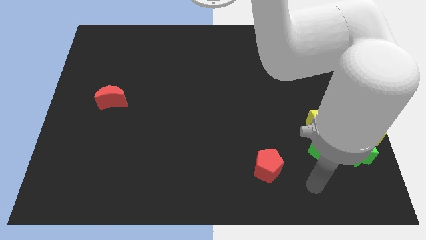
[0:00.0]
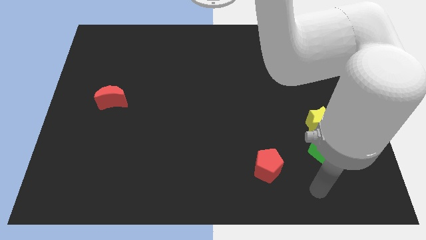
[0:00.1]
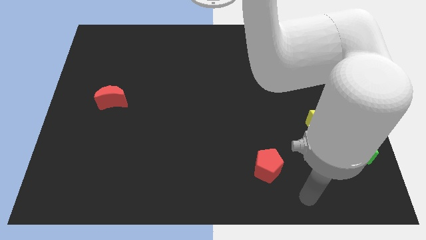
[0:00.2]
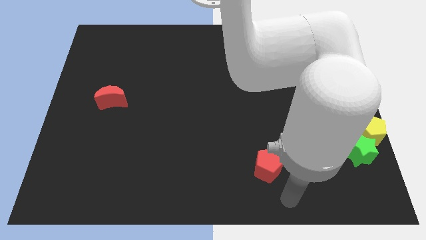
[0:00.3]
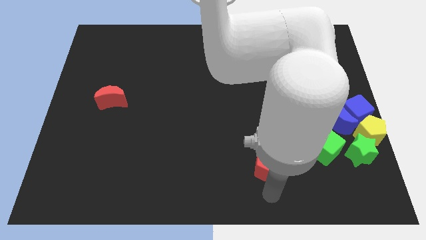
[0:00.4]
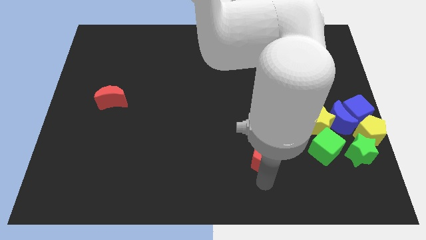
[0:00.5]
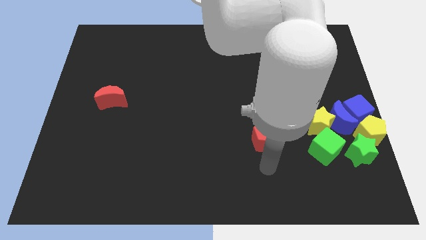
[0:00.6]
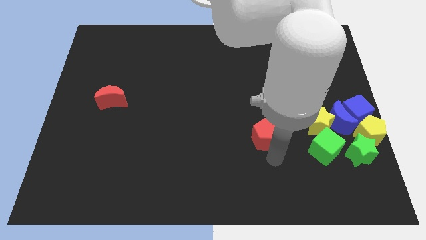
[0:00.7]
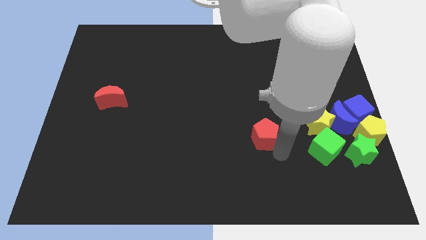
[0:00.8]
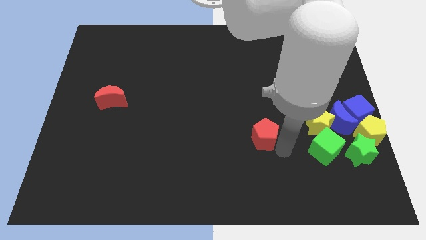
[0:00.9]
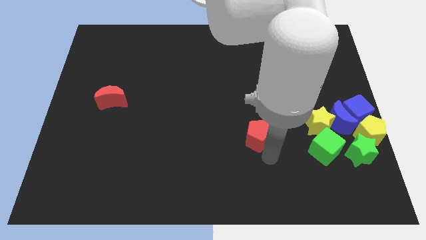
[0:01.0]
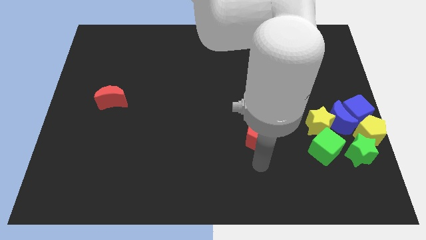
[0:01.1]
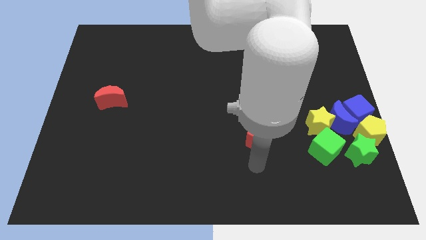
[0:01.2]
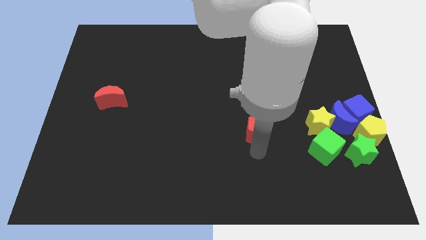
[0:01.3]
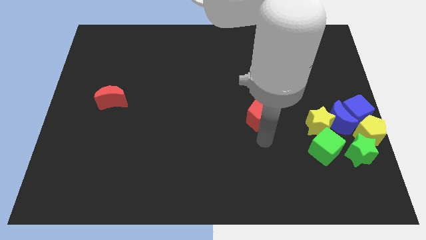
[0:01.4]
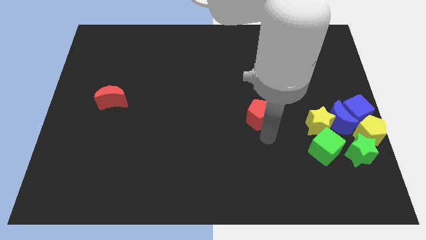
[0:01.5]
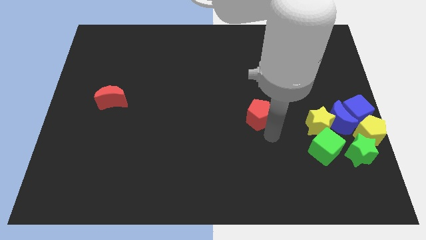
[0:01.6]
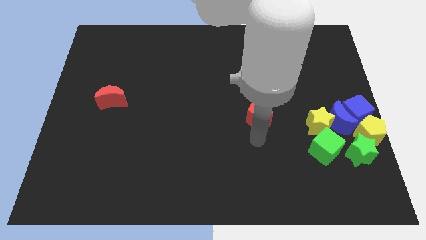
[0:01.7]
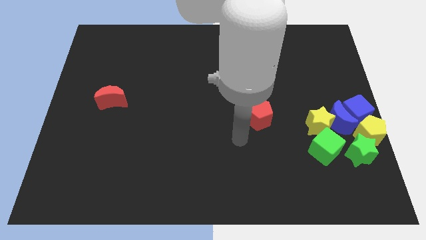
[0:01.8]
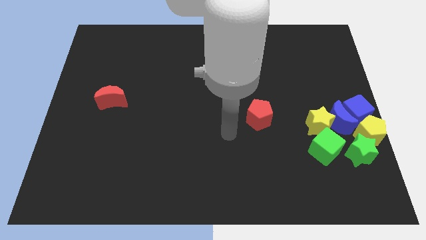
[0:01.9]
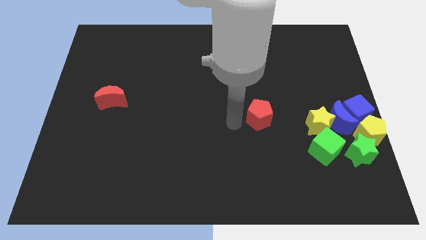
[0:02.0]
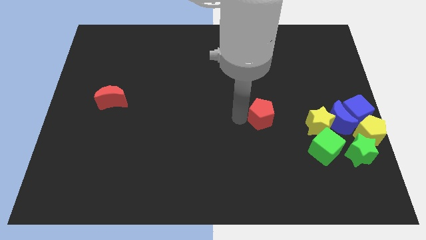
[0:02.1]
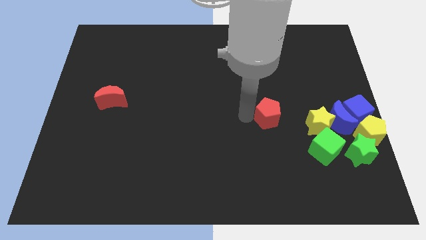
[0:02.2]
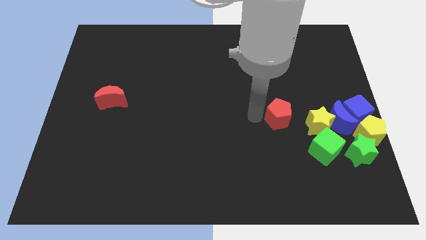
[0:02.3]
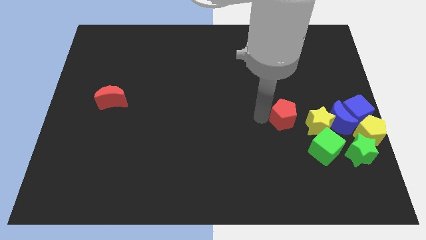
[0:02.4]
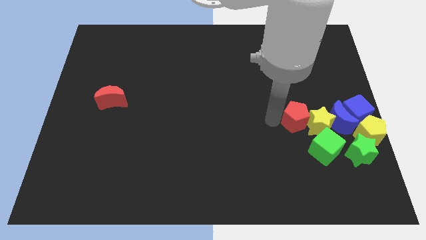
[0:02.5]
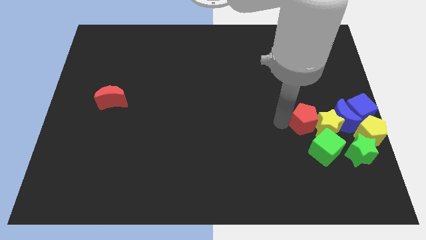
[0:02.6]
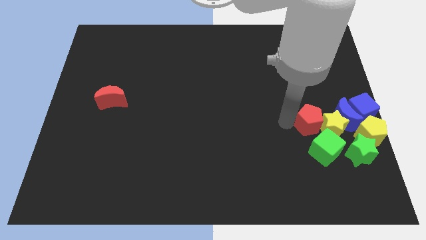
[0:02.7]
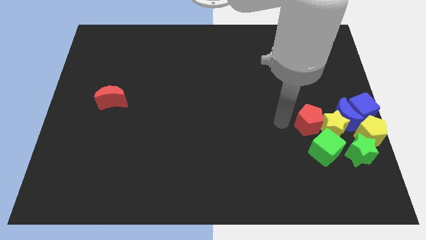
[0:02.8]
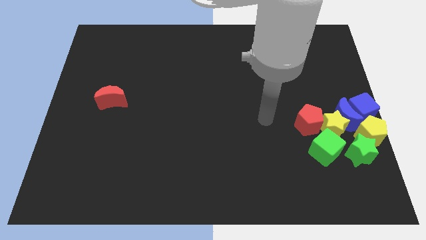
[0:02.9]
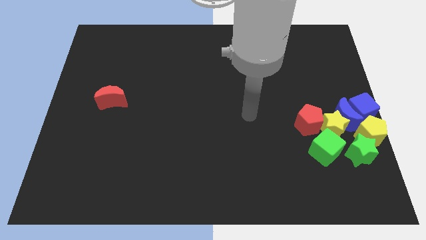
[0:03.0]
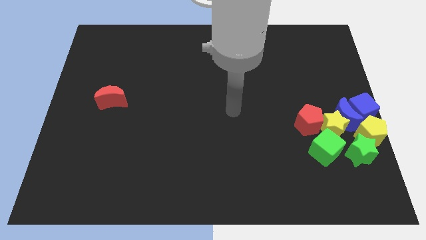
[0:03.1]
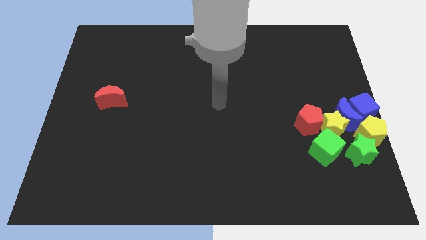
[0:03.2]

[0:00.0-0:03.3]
put the red pentagon on the left side of the yellow star

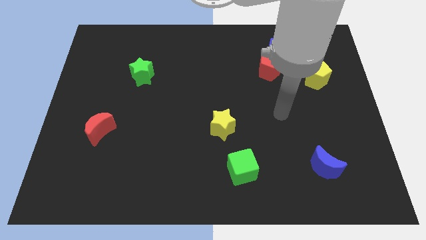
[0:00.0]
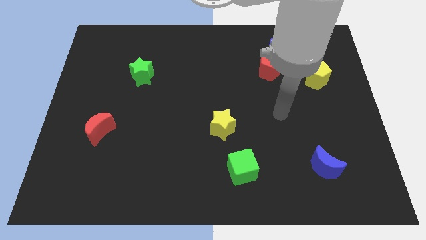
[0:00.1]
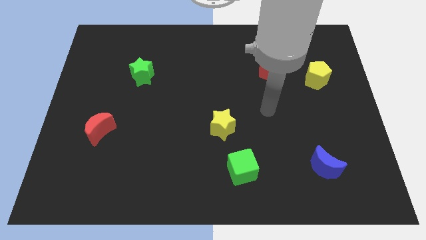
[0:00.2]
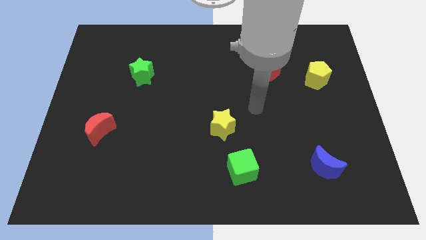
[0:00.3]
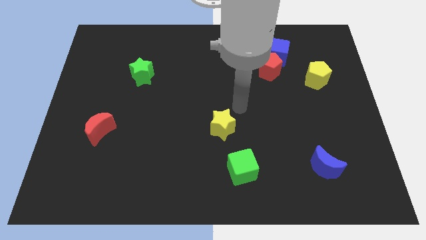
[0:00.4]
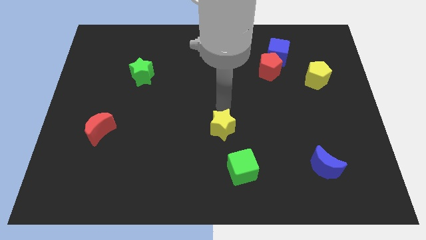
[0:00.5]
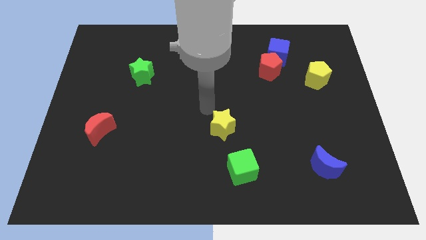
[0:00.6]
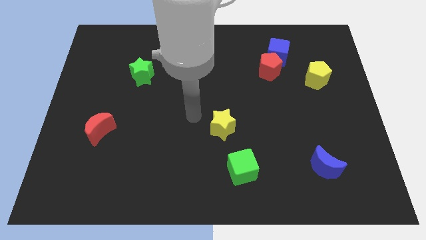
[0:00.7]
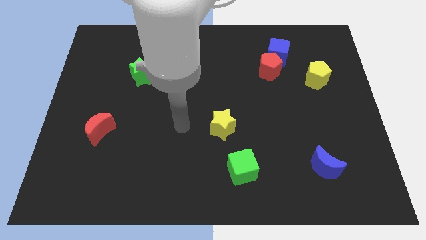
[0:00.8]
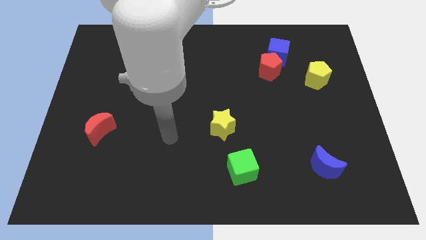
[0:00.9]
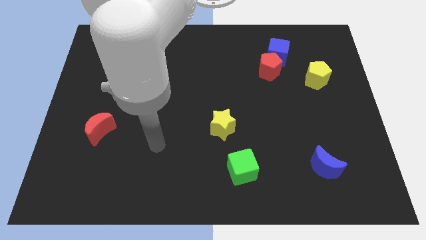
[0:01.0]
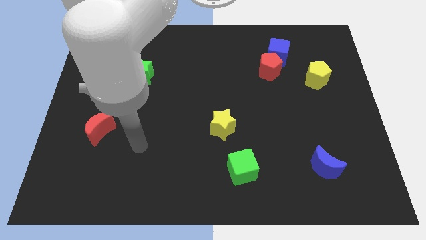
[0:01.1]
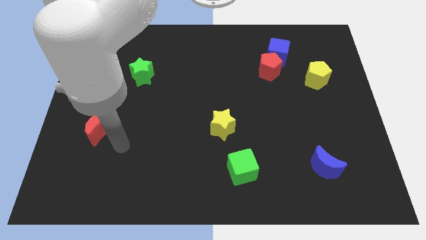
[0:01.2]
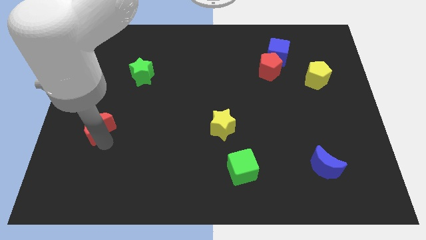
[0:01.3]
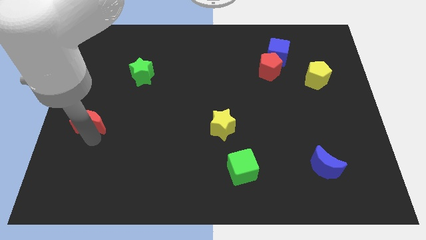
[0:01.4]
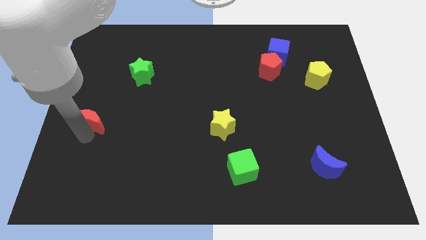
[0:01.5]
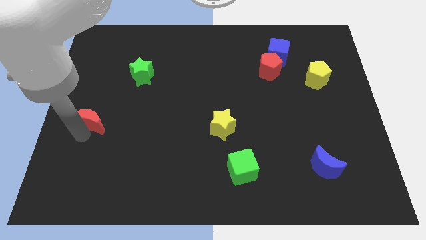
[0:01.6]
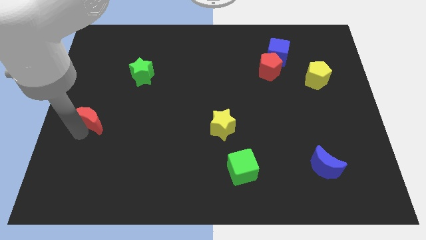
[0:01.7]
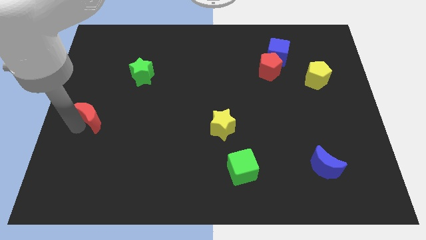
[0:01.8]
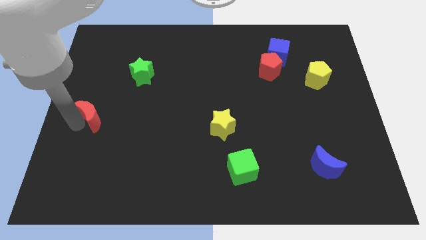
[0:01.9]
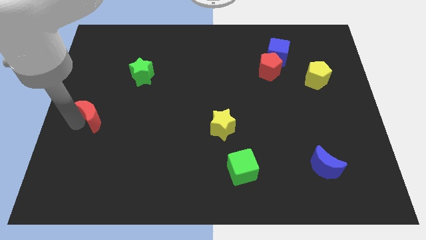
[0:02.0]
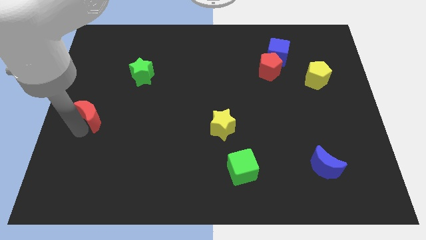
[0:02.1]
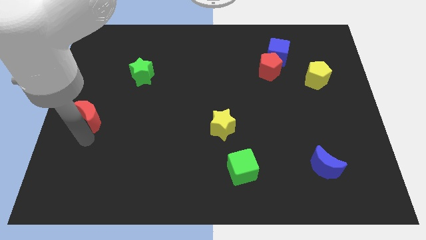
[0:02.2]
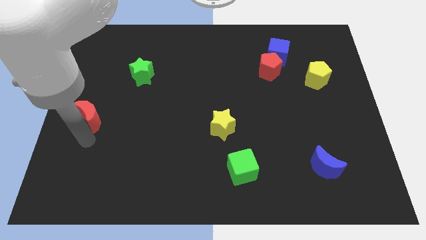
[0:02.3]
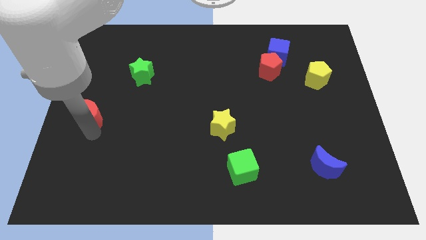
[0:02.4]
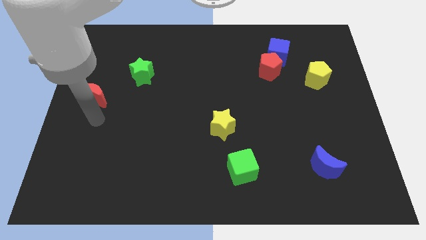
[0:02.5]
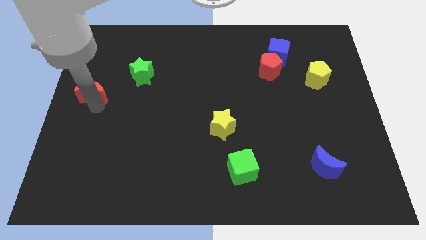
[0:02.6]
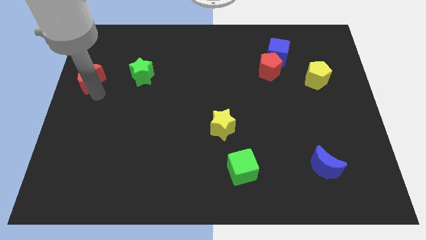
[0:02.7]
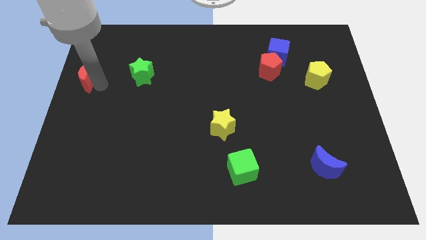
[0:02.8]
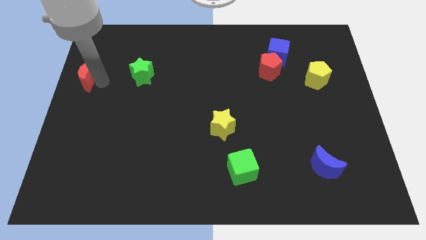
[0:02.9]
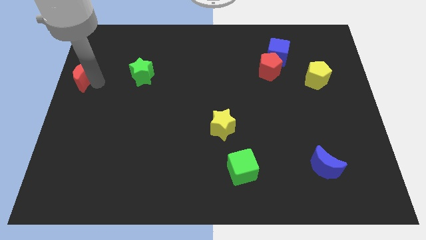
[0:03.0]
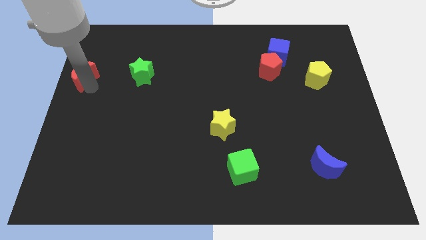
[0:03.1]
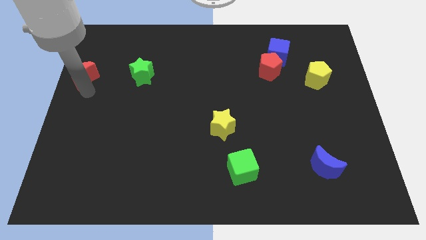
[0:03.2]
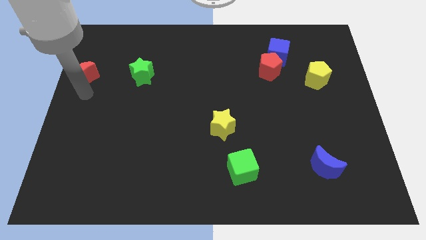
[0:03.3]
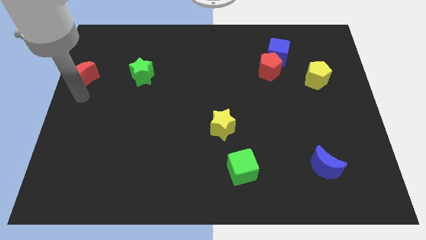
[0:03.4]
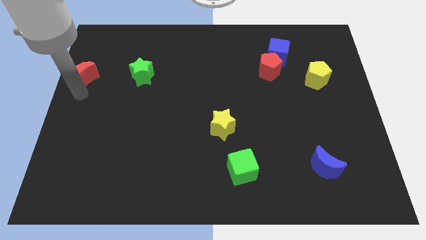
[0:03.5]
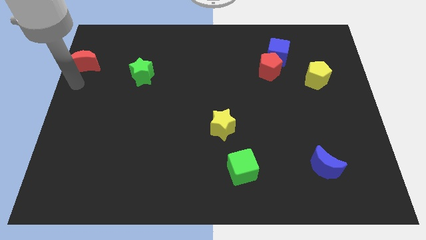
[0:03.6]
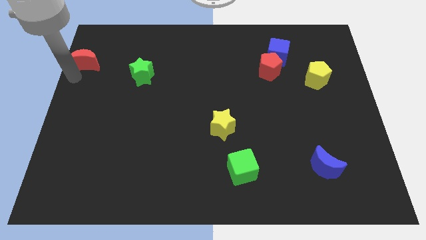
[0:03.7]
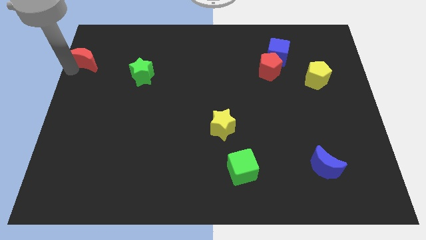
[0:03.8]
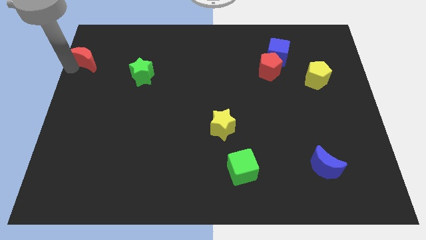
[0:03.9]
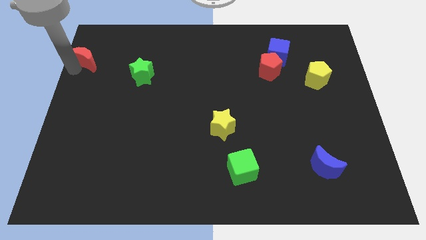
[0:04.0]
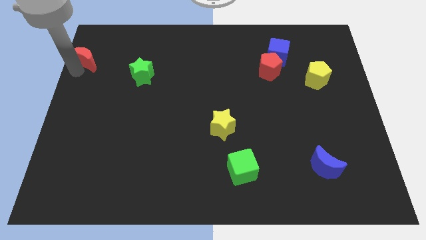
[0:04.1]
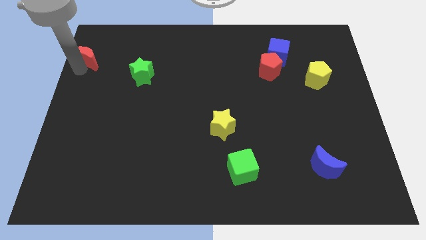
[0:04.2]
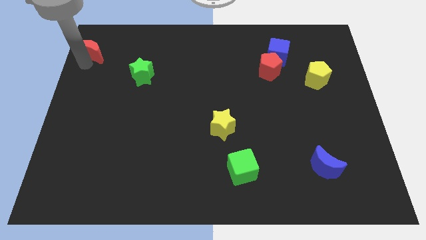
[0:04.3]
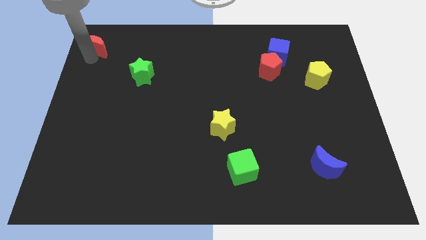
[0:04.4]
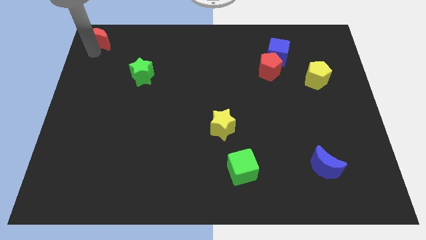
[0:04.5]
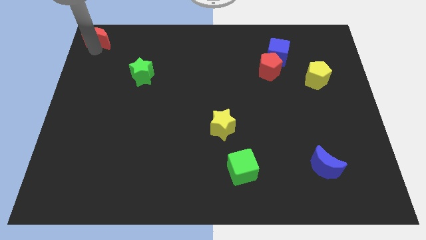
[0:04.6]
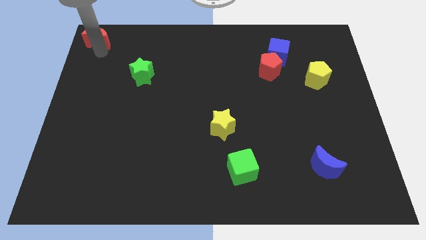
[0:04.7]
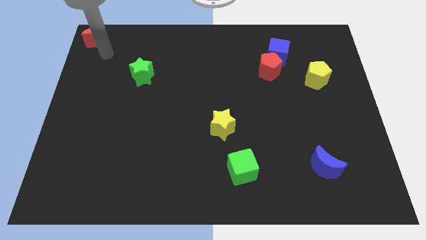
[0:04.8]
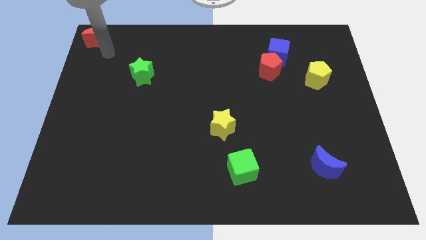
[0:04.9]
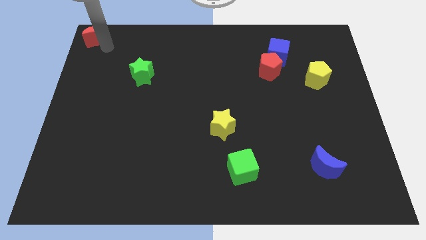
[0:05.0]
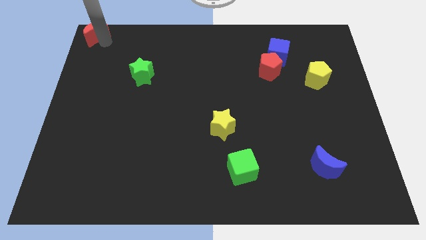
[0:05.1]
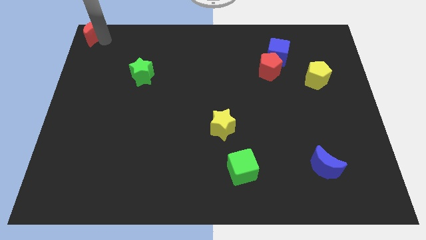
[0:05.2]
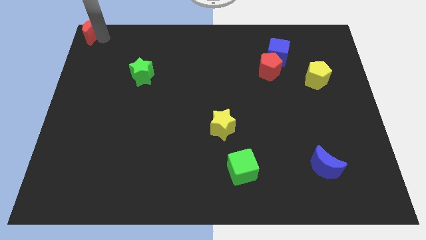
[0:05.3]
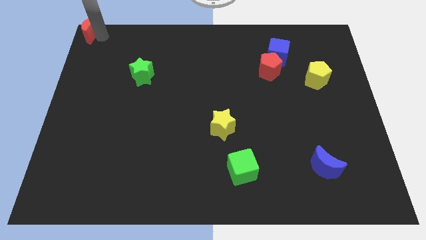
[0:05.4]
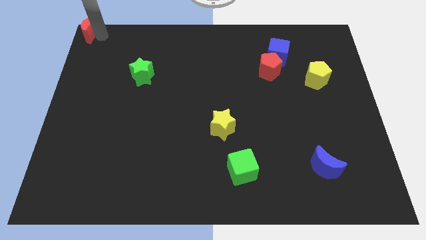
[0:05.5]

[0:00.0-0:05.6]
place the red moon to the top left side
